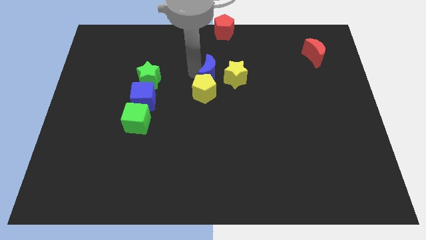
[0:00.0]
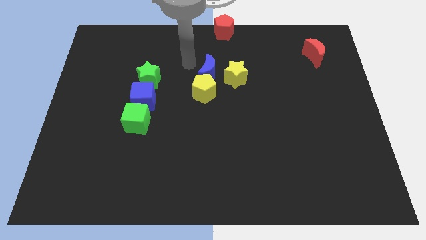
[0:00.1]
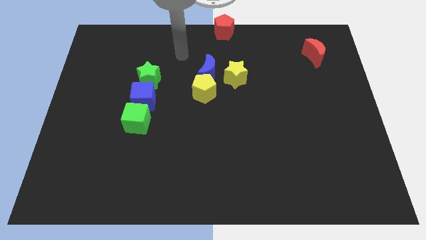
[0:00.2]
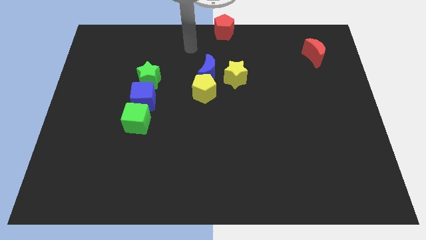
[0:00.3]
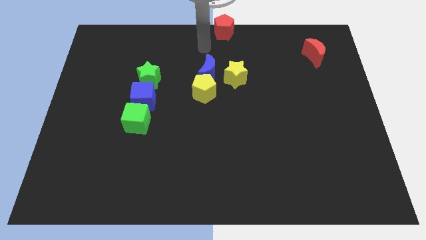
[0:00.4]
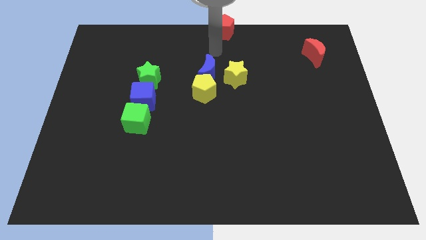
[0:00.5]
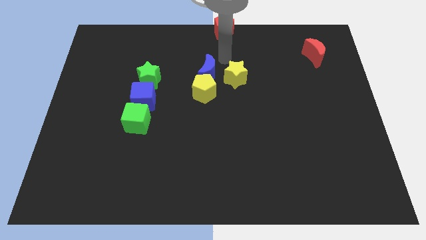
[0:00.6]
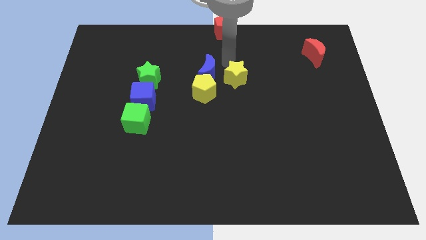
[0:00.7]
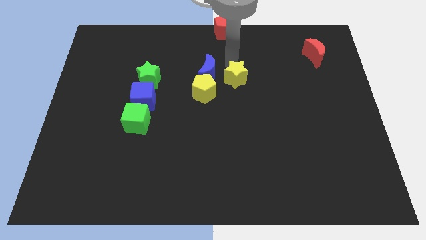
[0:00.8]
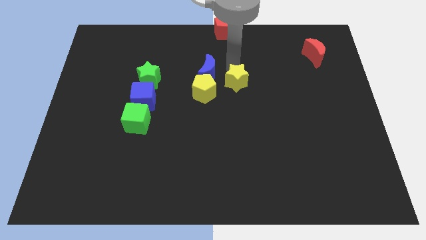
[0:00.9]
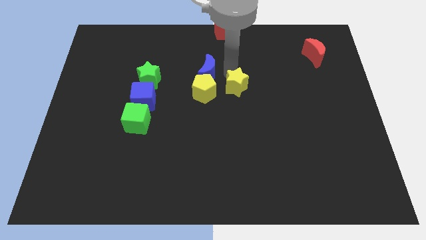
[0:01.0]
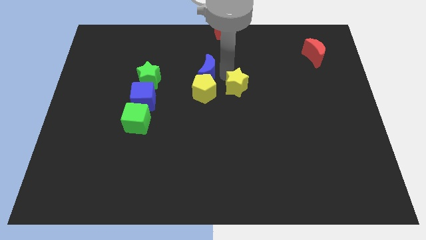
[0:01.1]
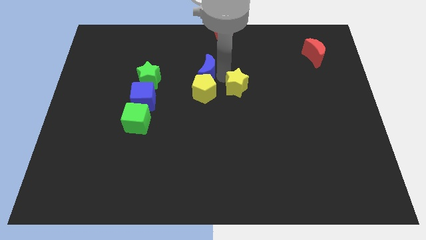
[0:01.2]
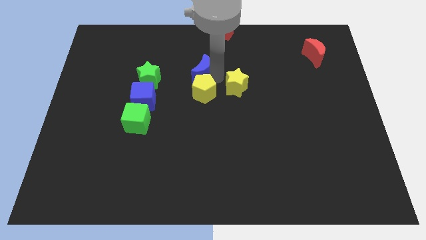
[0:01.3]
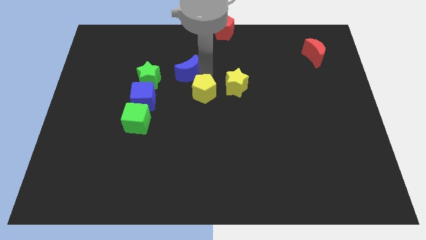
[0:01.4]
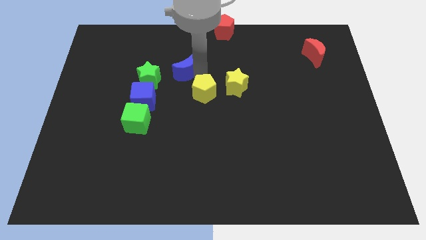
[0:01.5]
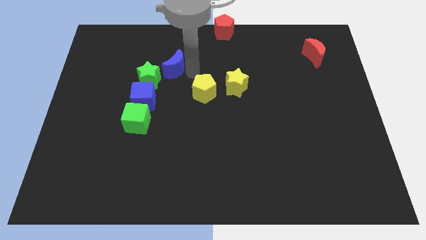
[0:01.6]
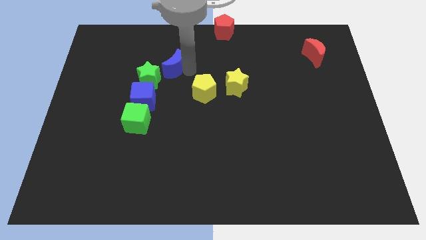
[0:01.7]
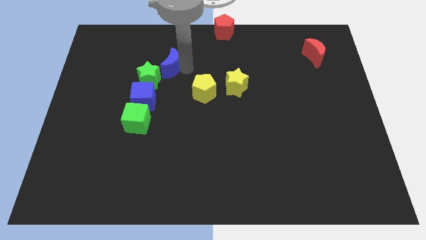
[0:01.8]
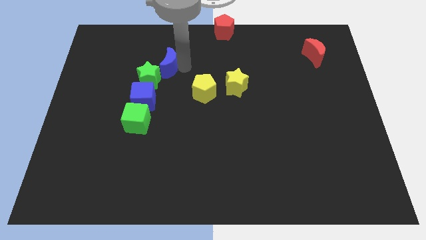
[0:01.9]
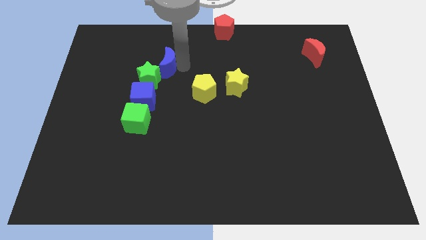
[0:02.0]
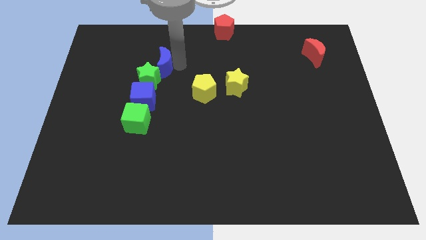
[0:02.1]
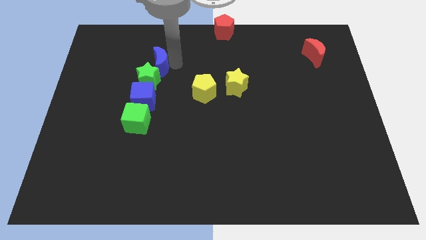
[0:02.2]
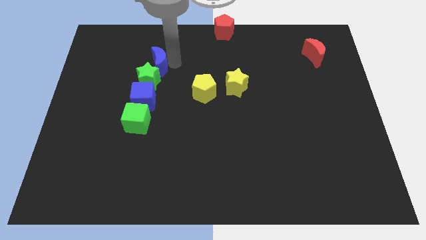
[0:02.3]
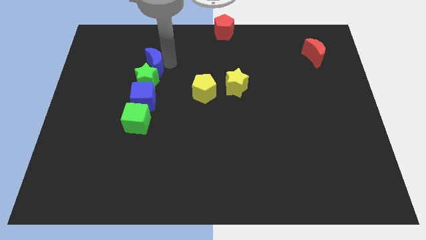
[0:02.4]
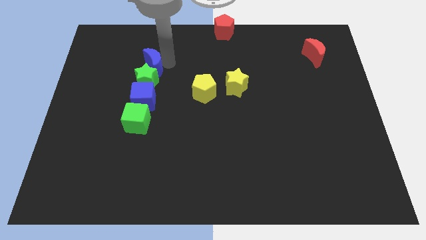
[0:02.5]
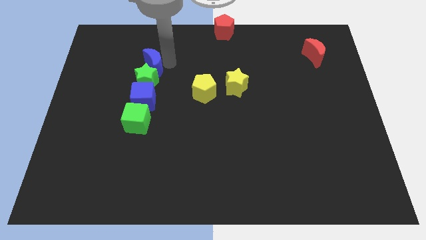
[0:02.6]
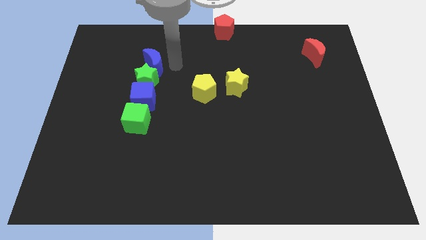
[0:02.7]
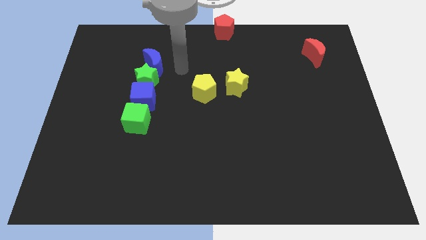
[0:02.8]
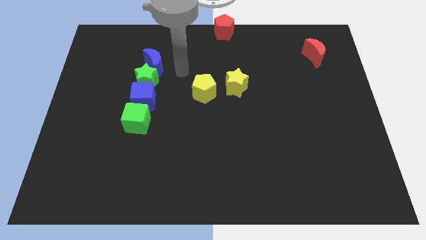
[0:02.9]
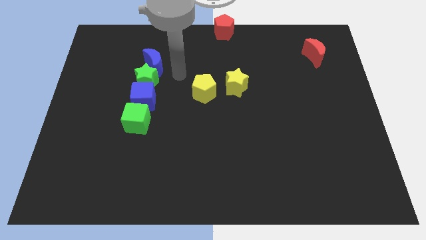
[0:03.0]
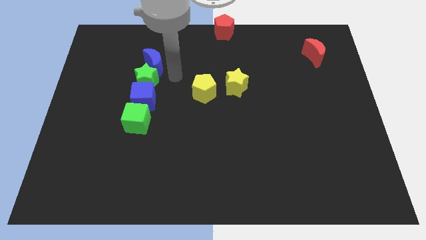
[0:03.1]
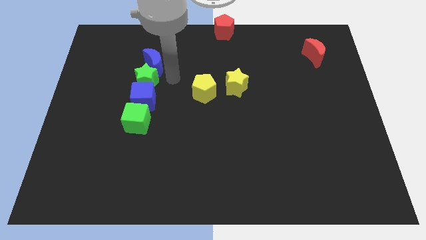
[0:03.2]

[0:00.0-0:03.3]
slide the blue crescent into the top side of the green star

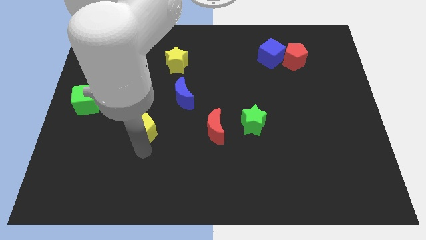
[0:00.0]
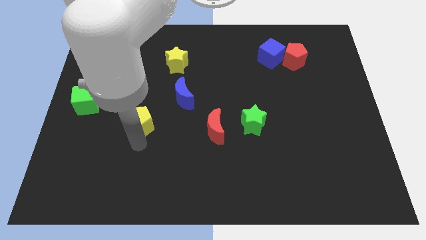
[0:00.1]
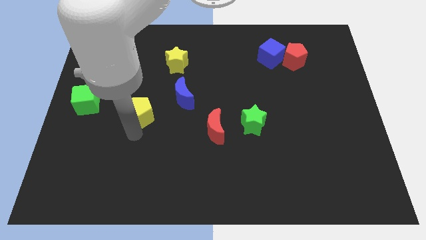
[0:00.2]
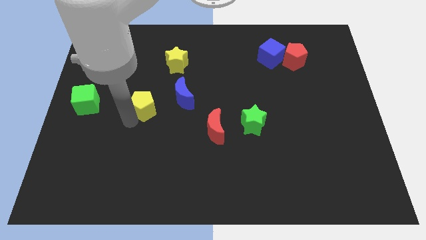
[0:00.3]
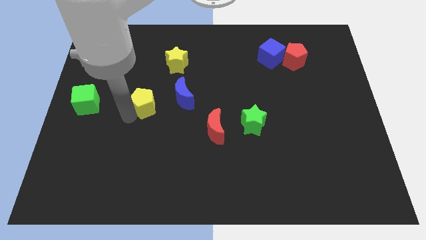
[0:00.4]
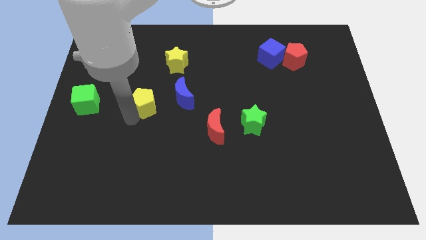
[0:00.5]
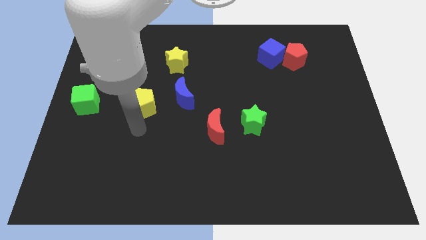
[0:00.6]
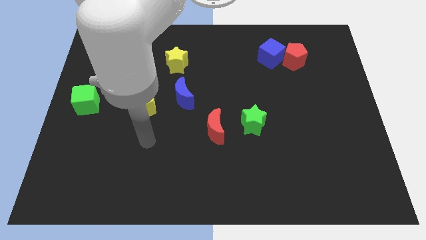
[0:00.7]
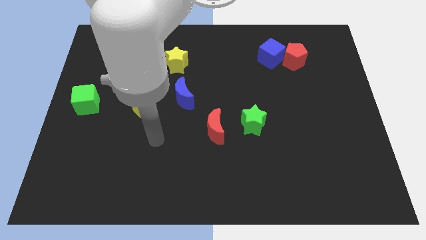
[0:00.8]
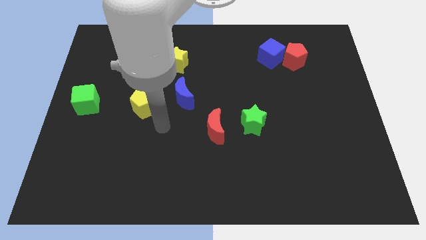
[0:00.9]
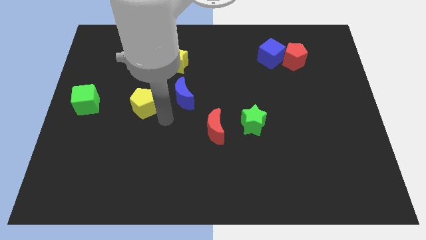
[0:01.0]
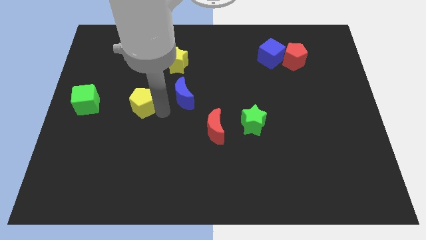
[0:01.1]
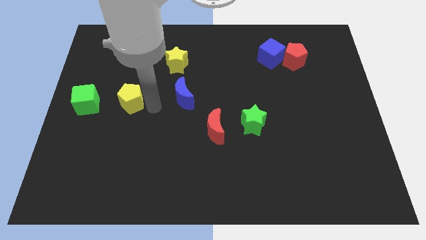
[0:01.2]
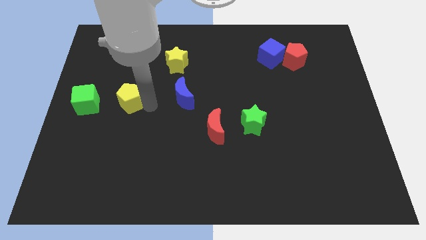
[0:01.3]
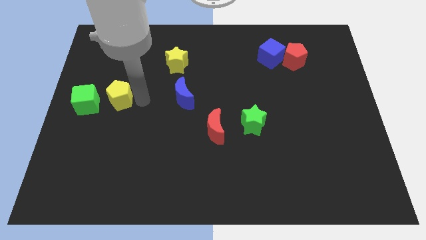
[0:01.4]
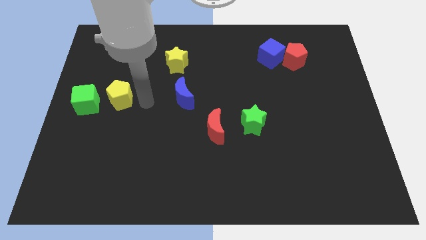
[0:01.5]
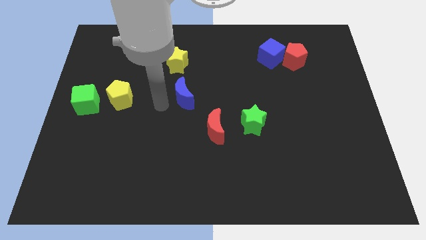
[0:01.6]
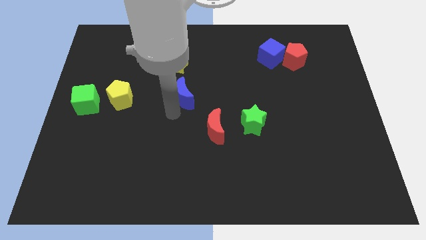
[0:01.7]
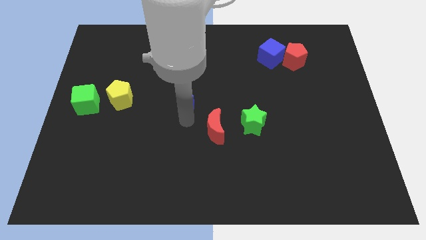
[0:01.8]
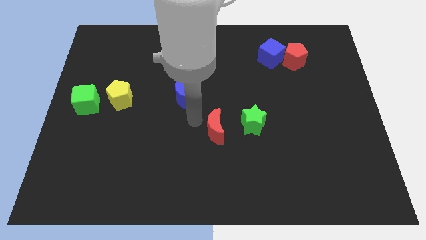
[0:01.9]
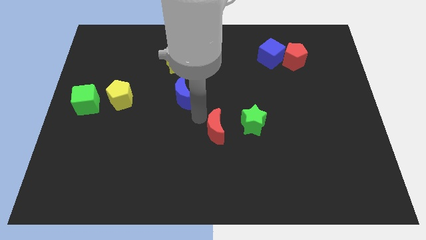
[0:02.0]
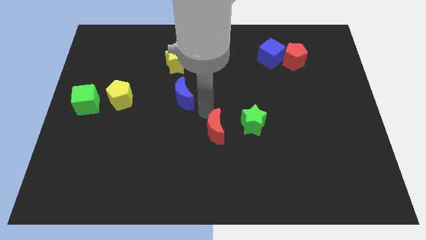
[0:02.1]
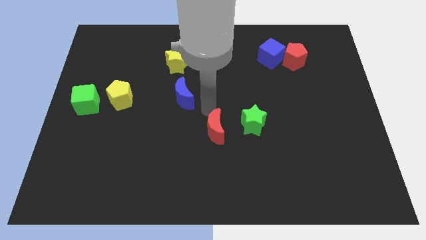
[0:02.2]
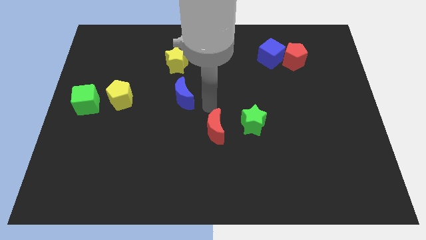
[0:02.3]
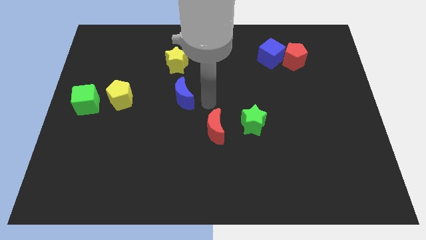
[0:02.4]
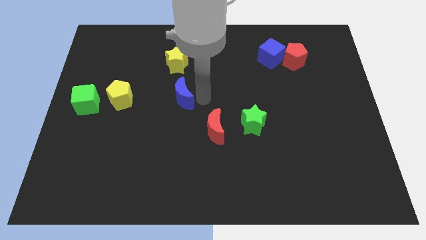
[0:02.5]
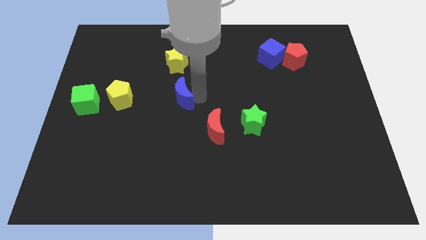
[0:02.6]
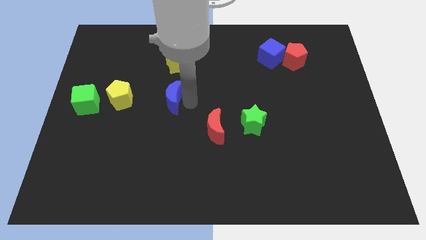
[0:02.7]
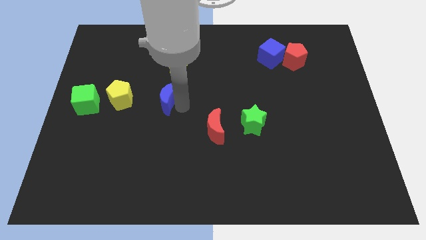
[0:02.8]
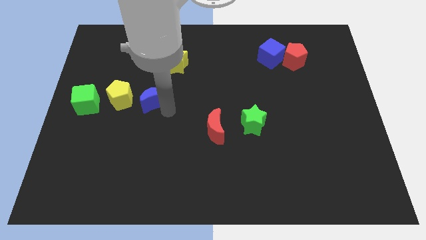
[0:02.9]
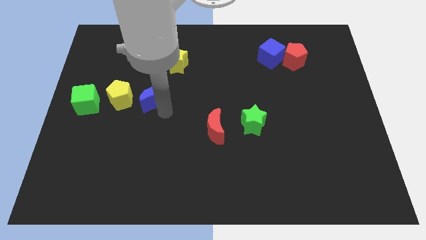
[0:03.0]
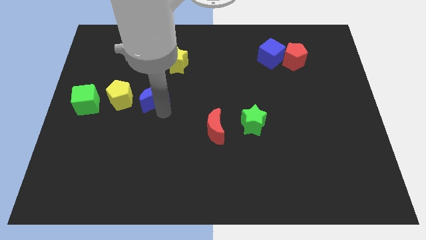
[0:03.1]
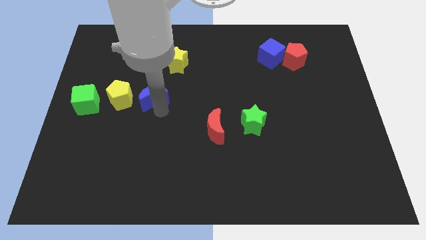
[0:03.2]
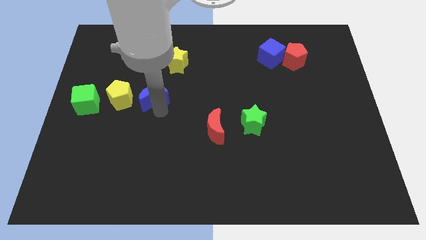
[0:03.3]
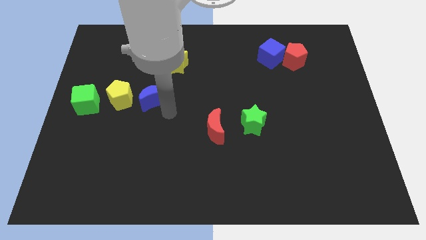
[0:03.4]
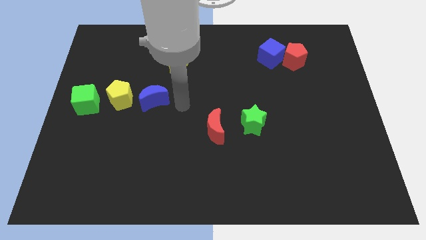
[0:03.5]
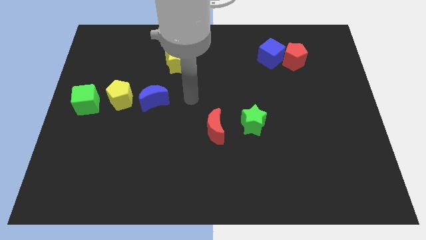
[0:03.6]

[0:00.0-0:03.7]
place blue moon right to the yellow pentagon

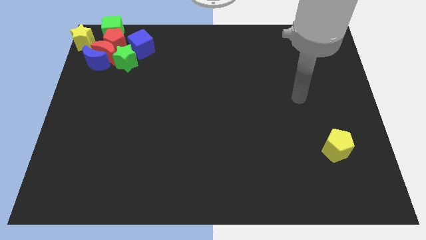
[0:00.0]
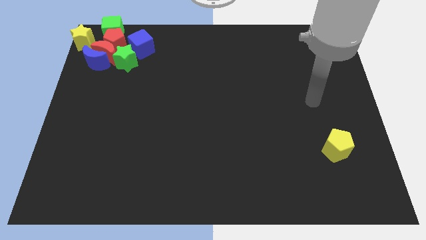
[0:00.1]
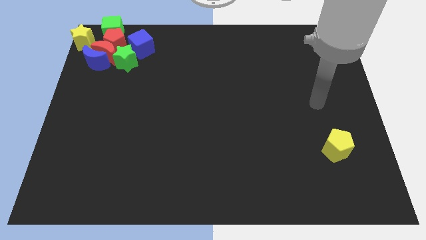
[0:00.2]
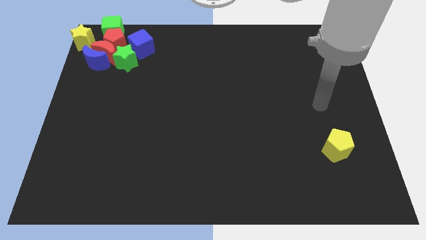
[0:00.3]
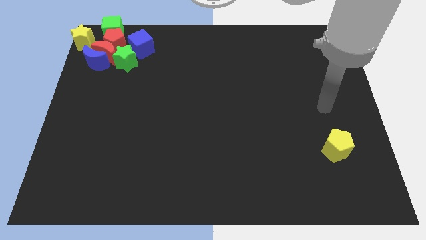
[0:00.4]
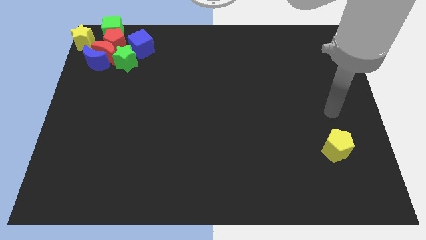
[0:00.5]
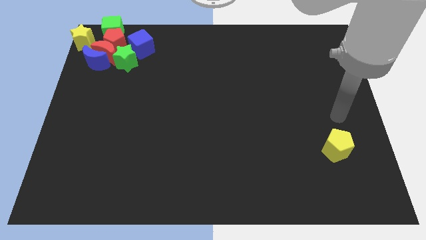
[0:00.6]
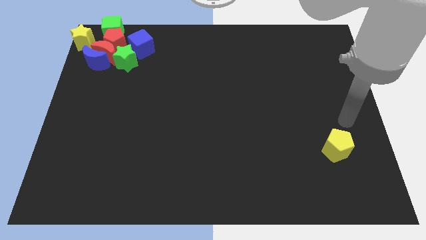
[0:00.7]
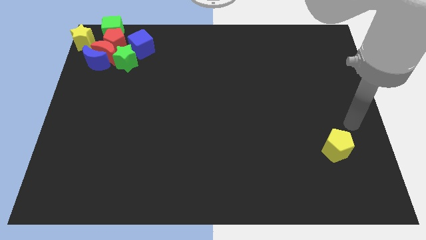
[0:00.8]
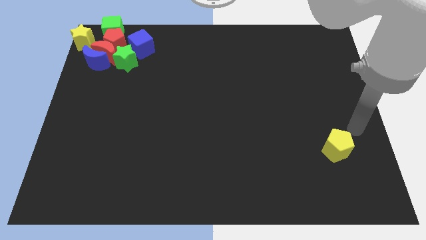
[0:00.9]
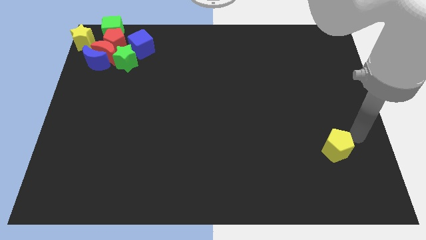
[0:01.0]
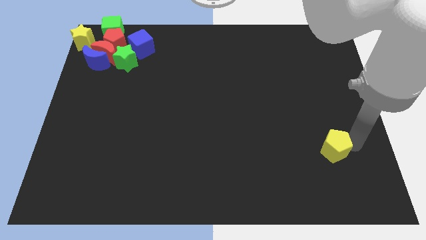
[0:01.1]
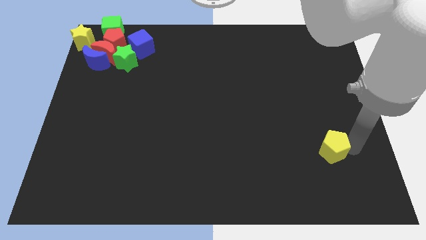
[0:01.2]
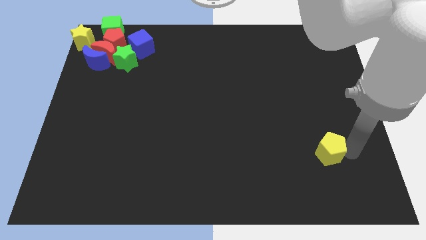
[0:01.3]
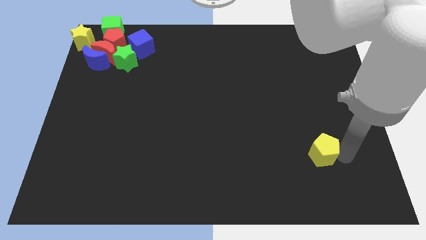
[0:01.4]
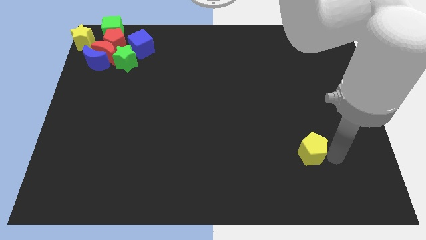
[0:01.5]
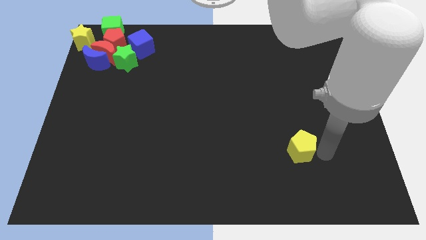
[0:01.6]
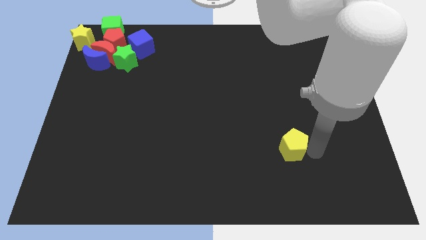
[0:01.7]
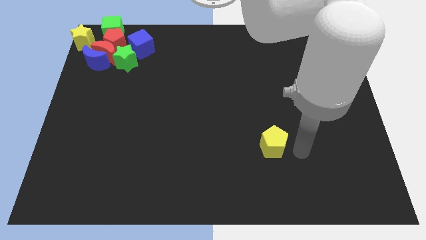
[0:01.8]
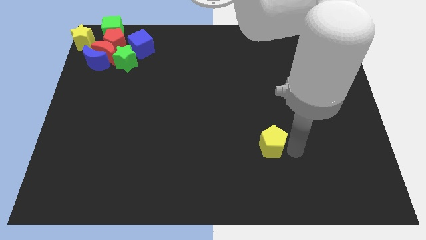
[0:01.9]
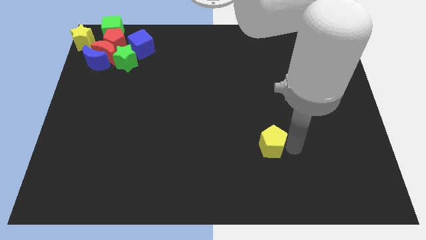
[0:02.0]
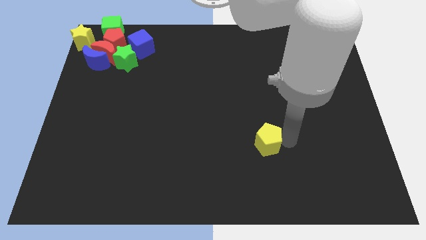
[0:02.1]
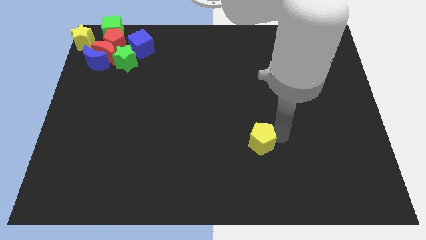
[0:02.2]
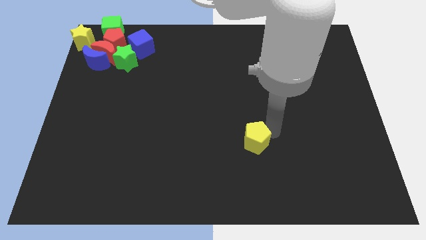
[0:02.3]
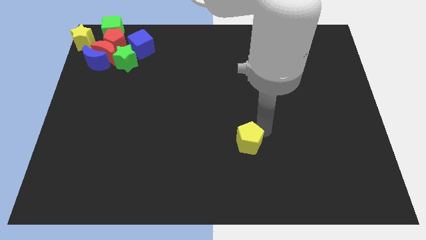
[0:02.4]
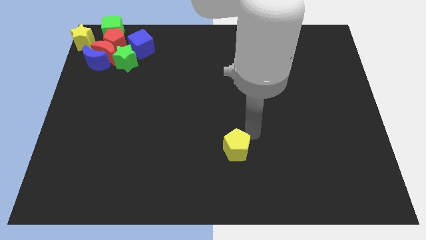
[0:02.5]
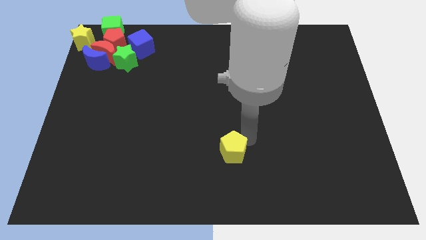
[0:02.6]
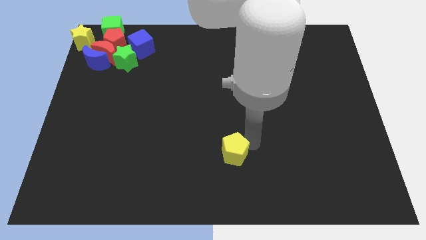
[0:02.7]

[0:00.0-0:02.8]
push the yellow pentagon towards the center of the board
